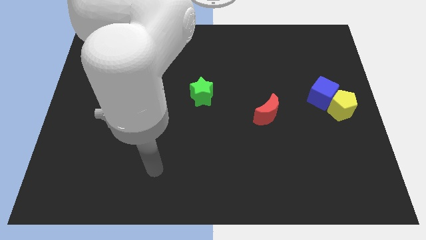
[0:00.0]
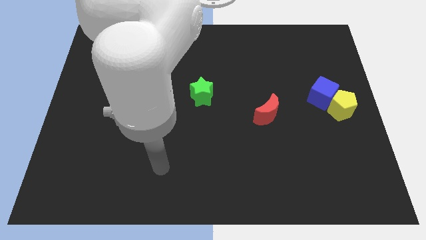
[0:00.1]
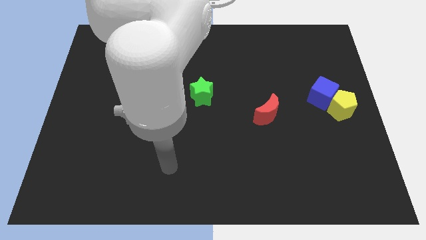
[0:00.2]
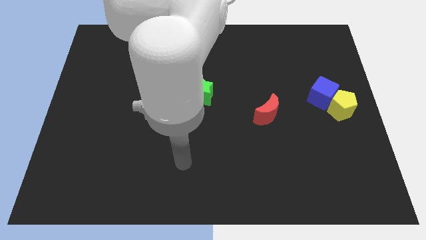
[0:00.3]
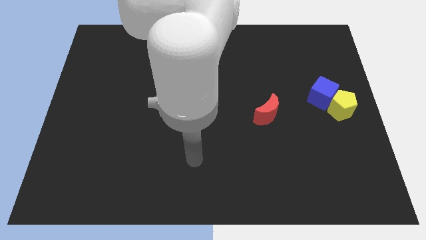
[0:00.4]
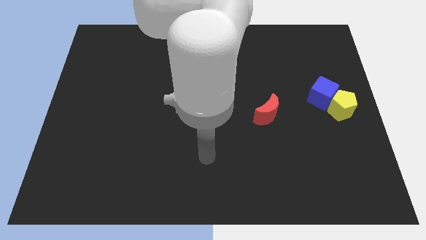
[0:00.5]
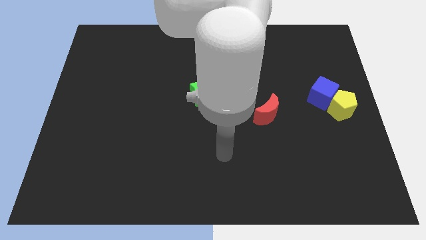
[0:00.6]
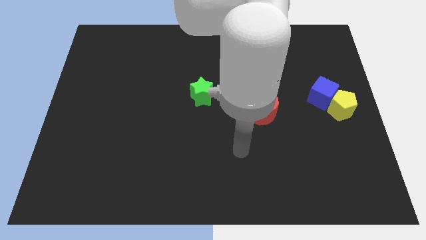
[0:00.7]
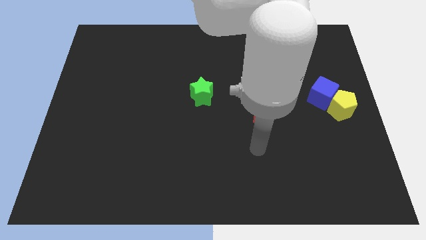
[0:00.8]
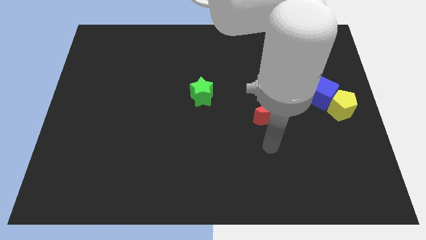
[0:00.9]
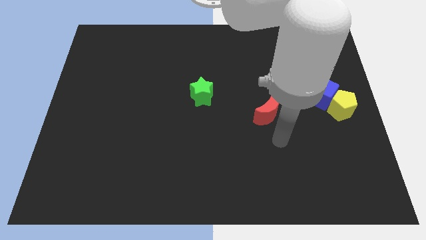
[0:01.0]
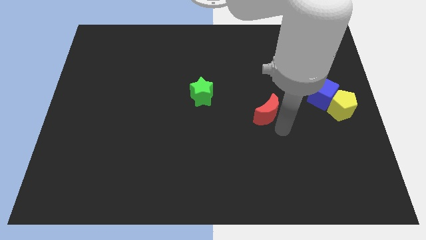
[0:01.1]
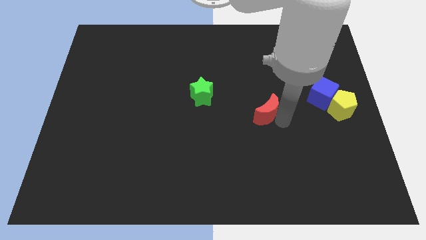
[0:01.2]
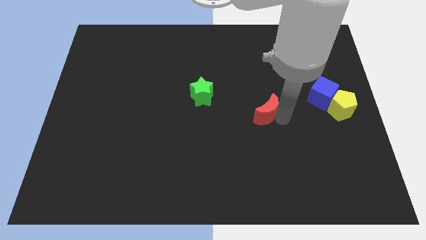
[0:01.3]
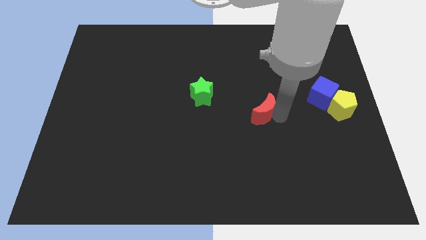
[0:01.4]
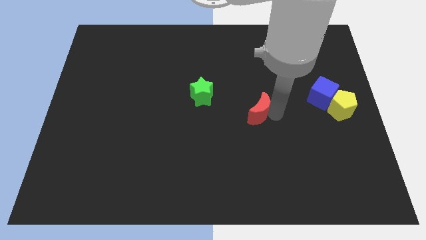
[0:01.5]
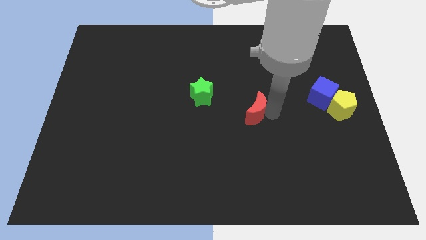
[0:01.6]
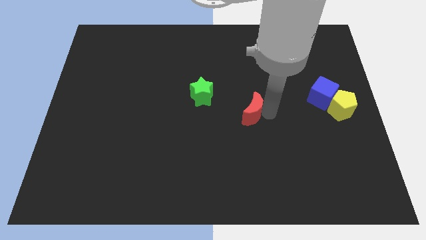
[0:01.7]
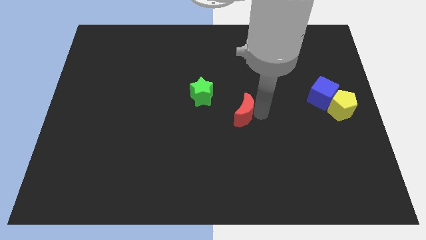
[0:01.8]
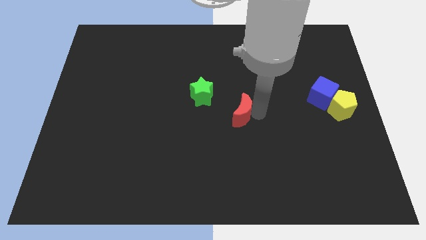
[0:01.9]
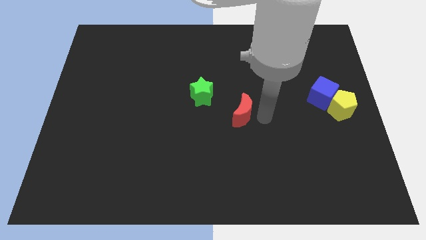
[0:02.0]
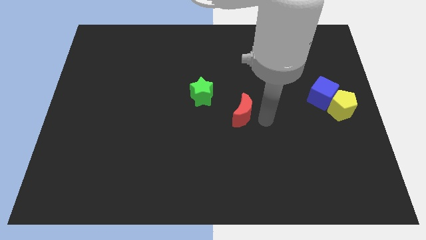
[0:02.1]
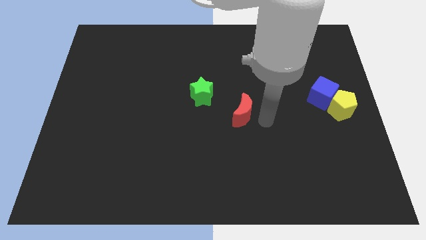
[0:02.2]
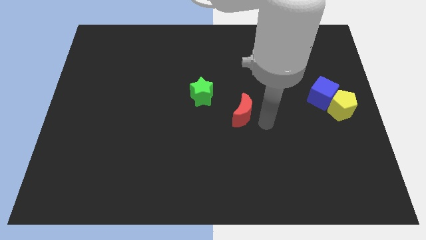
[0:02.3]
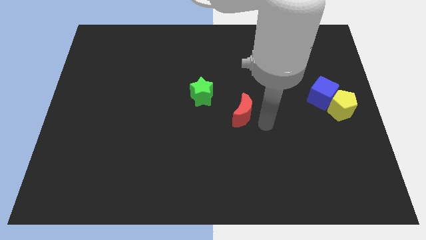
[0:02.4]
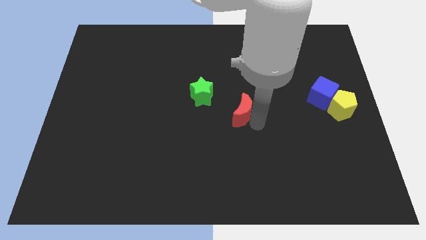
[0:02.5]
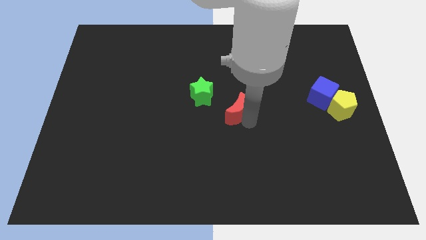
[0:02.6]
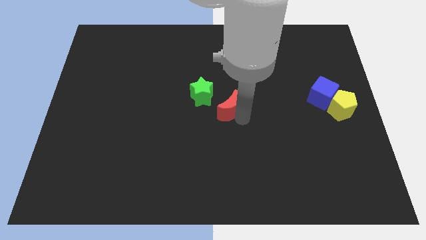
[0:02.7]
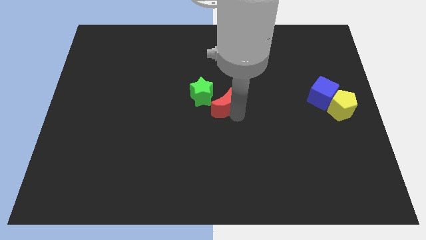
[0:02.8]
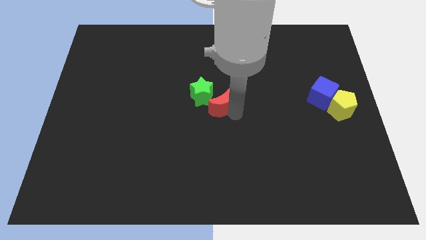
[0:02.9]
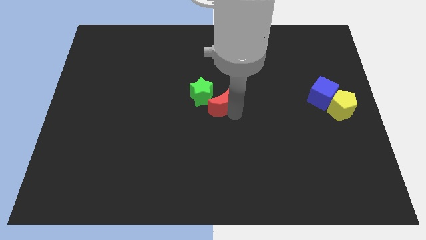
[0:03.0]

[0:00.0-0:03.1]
put the moon to the green block

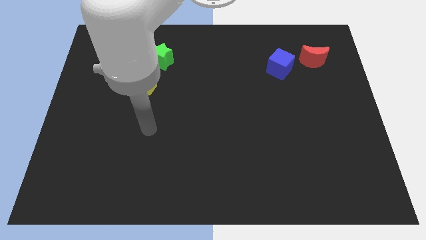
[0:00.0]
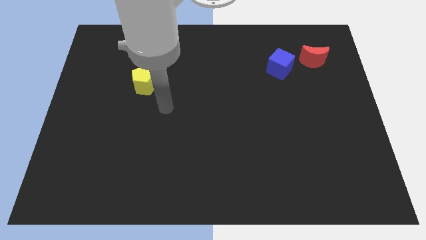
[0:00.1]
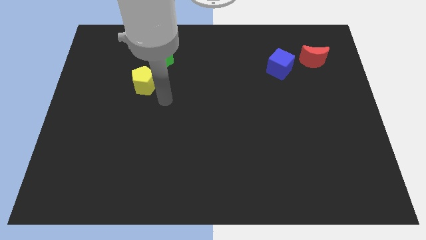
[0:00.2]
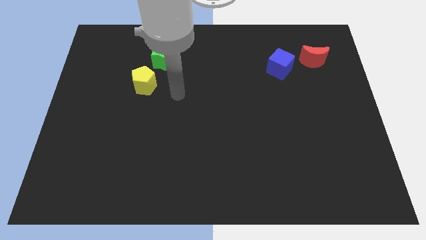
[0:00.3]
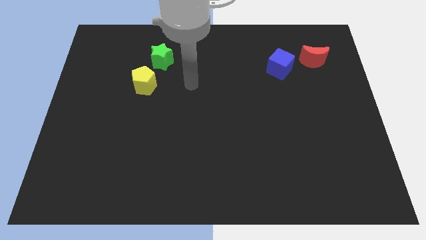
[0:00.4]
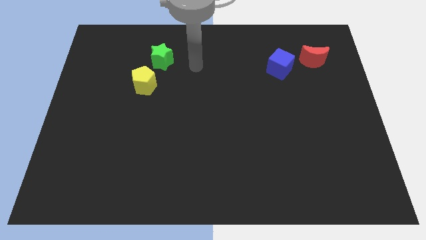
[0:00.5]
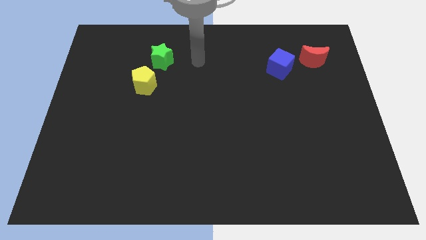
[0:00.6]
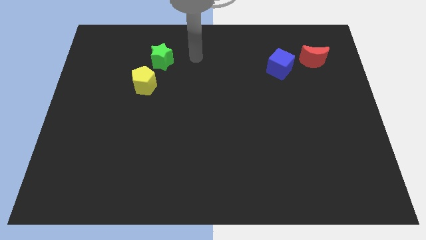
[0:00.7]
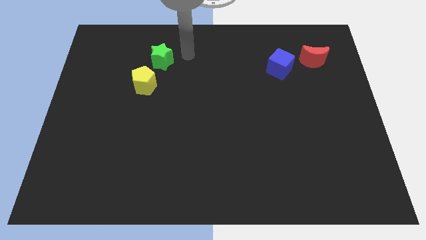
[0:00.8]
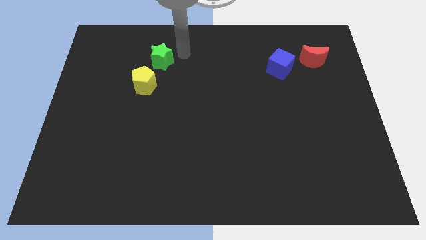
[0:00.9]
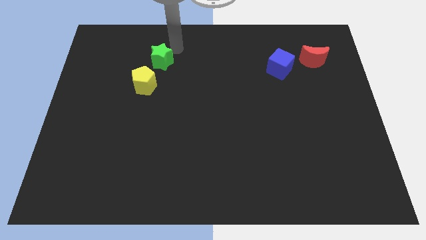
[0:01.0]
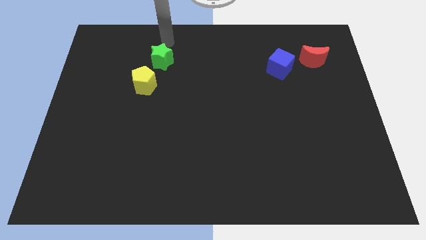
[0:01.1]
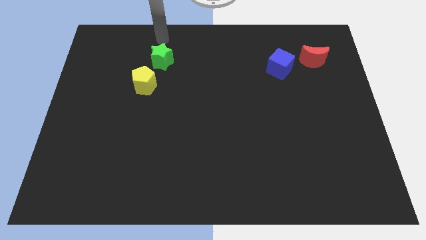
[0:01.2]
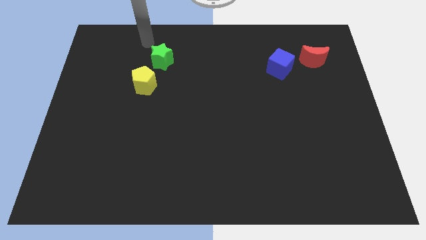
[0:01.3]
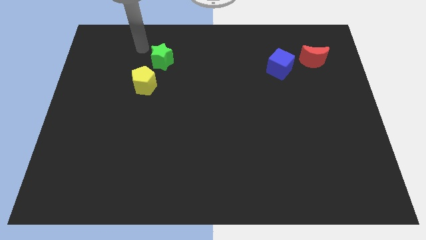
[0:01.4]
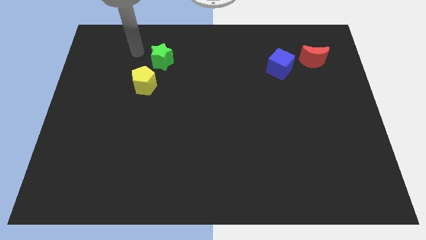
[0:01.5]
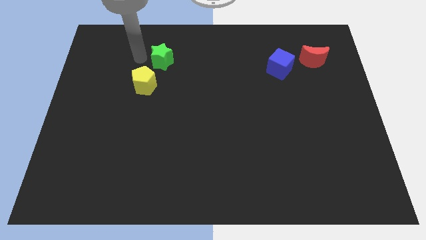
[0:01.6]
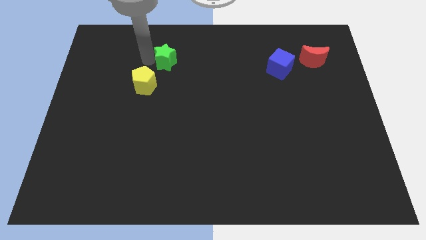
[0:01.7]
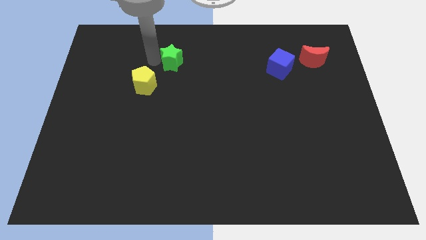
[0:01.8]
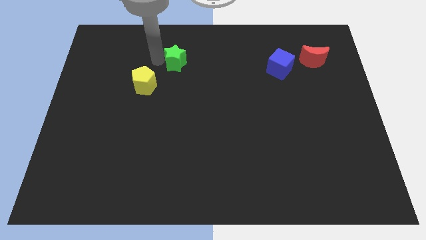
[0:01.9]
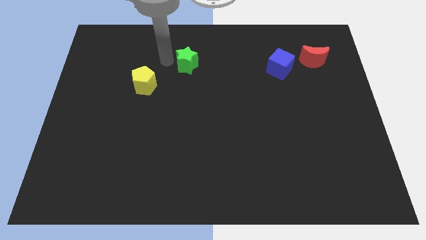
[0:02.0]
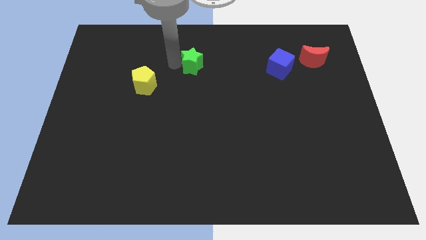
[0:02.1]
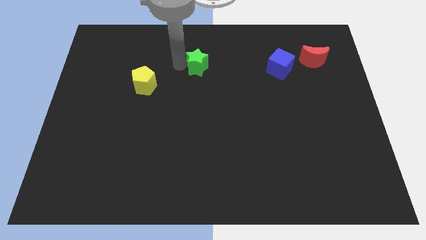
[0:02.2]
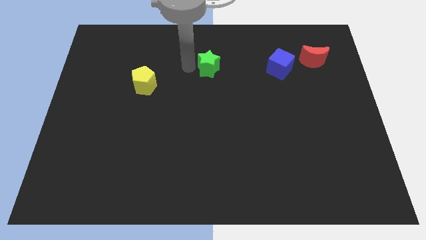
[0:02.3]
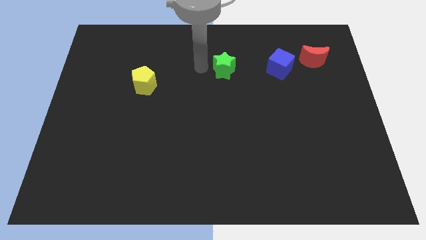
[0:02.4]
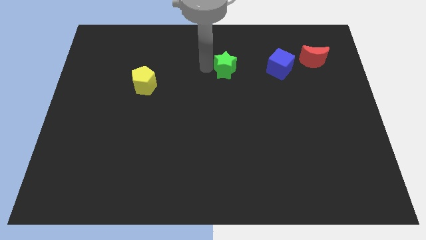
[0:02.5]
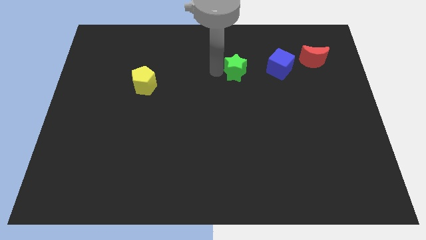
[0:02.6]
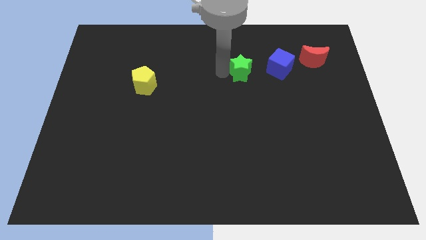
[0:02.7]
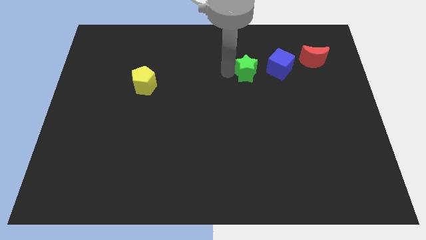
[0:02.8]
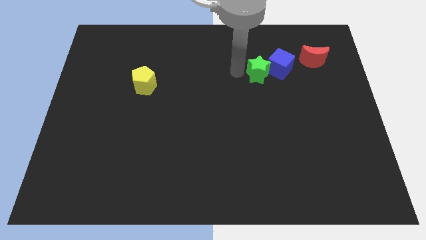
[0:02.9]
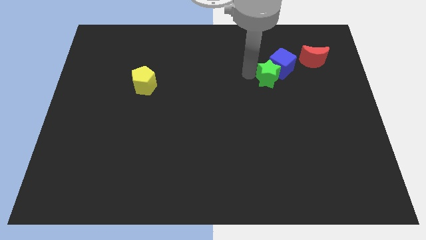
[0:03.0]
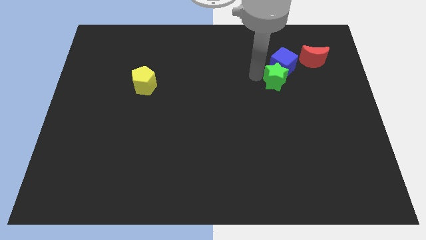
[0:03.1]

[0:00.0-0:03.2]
slide the green star to the blue cube

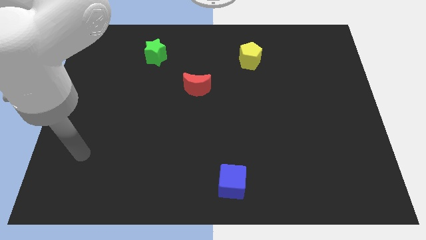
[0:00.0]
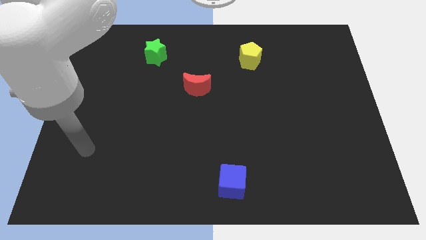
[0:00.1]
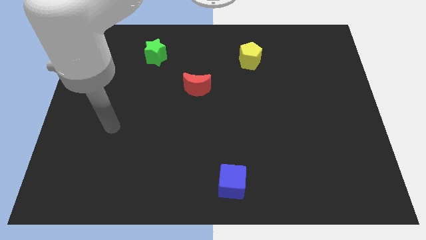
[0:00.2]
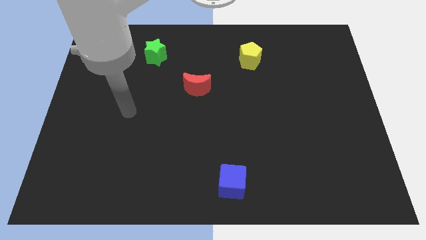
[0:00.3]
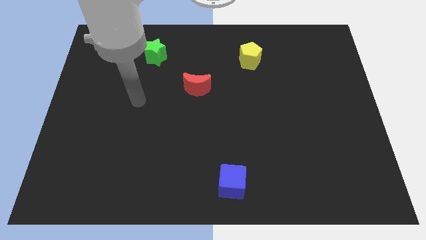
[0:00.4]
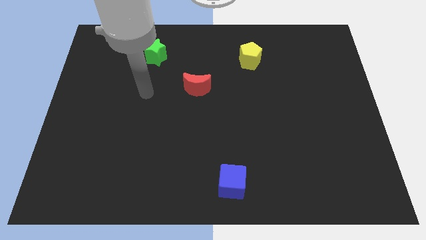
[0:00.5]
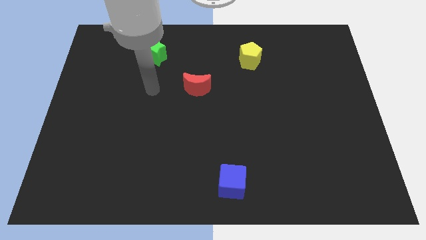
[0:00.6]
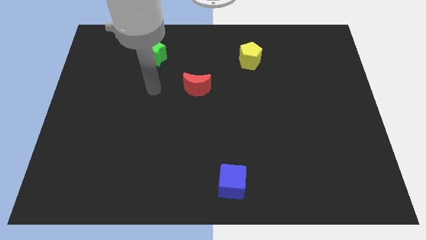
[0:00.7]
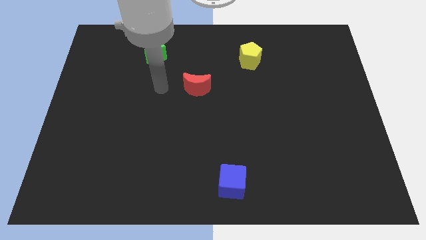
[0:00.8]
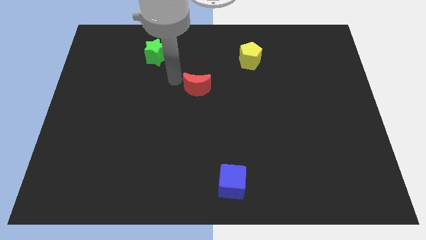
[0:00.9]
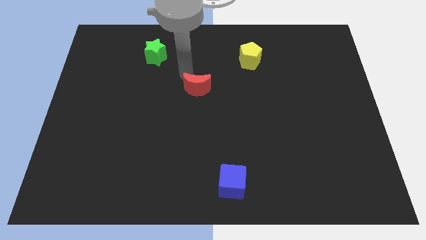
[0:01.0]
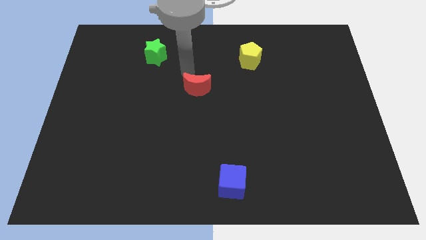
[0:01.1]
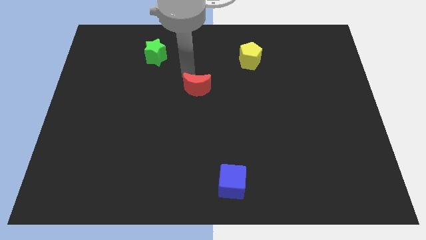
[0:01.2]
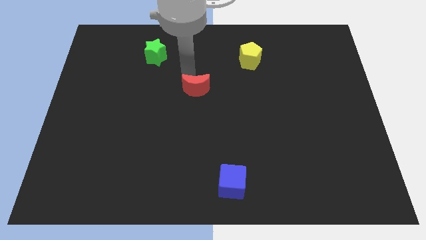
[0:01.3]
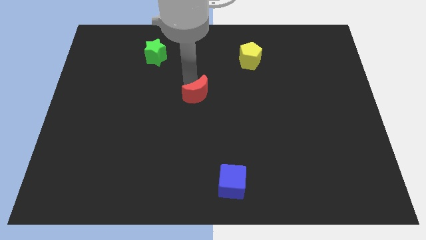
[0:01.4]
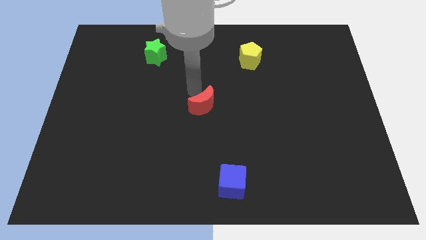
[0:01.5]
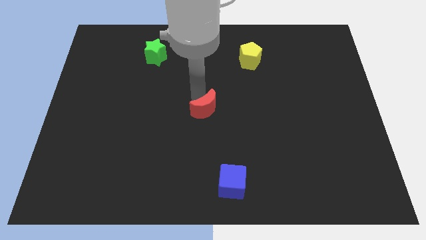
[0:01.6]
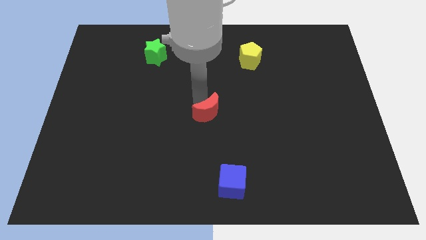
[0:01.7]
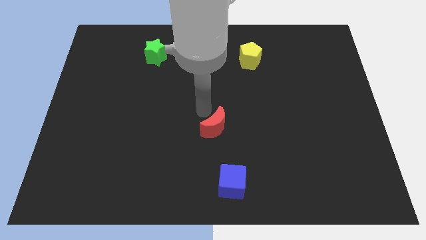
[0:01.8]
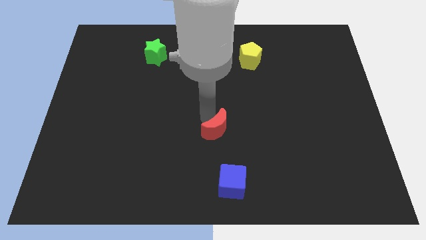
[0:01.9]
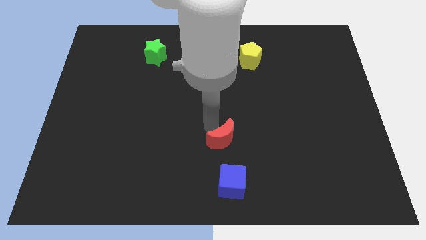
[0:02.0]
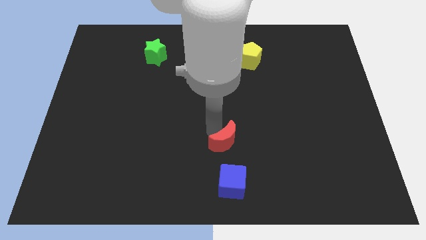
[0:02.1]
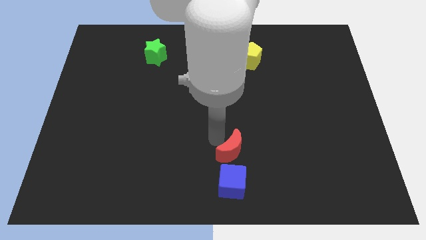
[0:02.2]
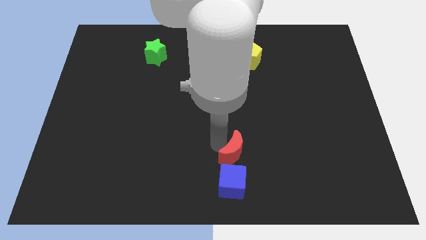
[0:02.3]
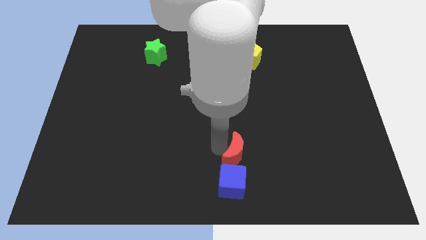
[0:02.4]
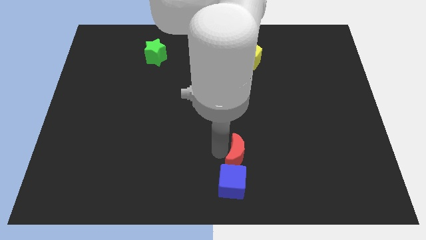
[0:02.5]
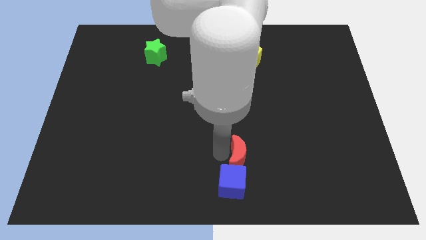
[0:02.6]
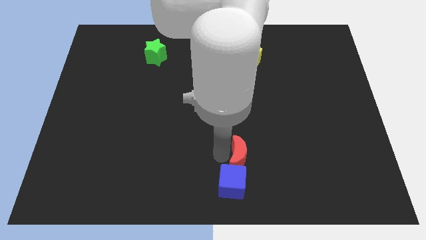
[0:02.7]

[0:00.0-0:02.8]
push the red block towards the blue cube
